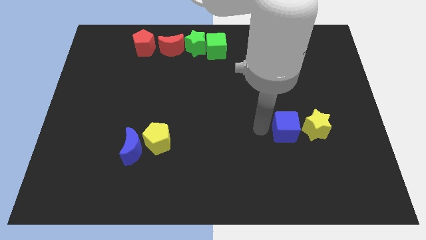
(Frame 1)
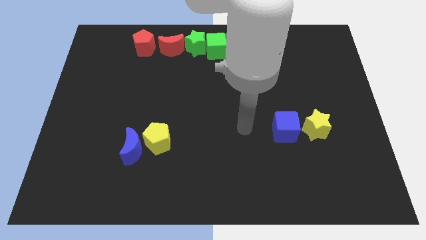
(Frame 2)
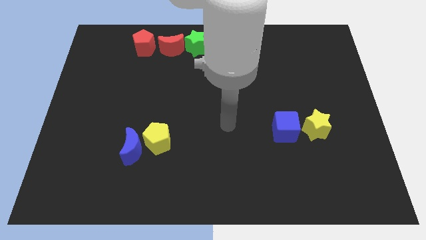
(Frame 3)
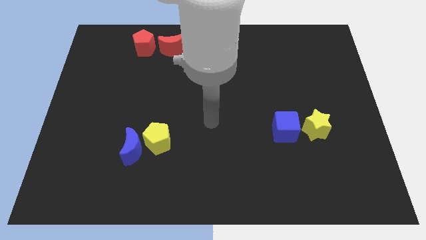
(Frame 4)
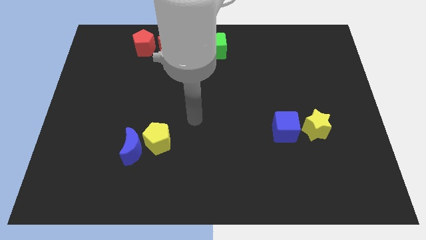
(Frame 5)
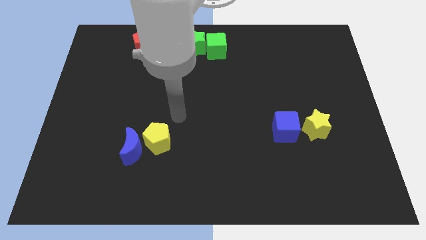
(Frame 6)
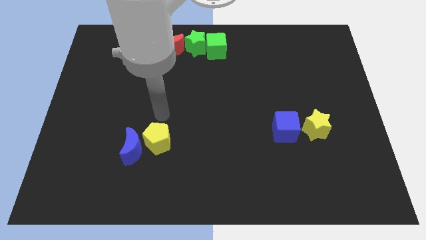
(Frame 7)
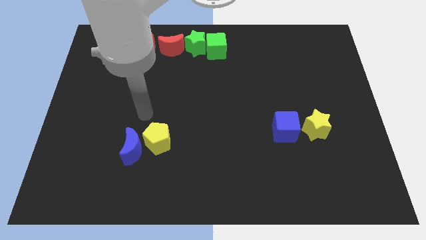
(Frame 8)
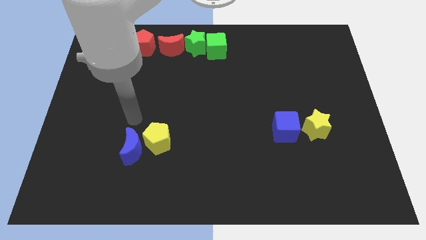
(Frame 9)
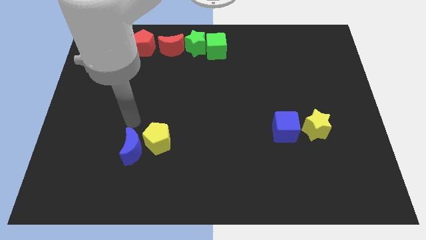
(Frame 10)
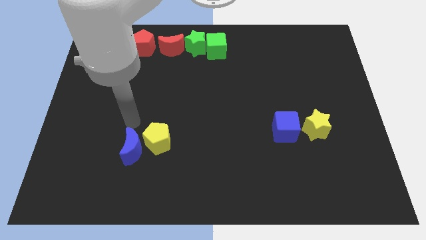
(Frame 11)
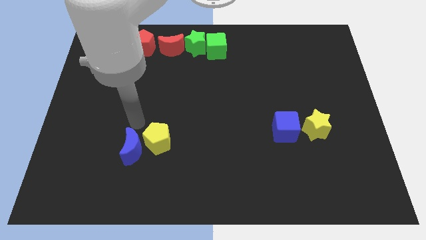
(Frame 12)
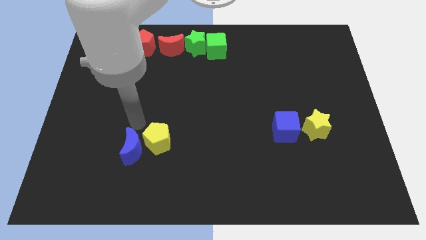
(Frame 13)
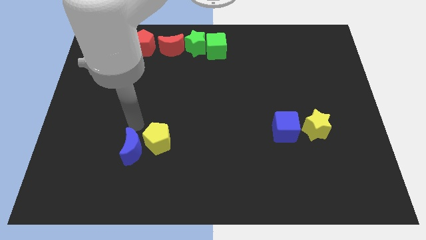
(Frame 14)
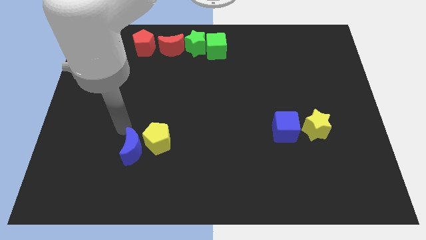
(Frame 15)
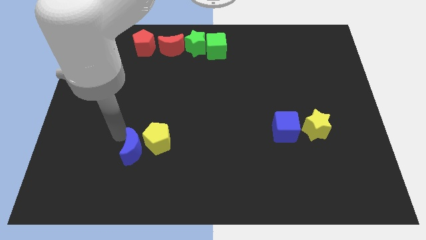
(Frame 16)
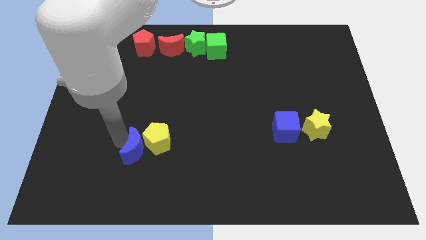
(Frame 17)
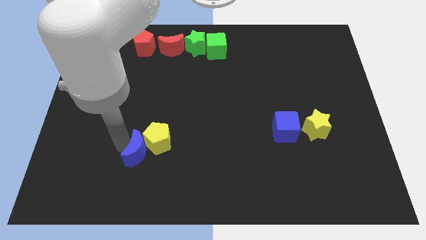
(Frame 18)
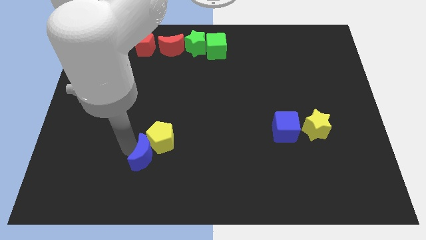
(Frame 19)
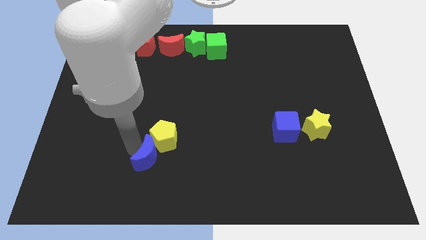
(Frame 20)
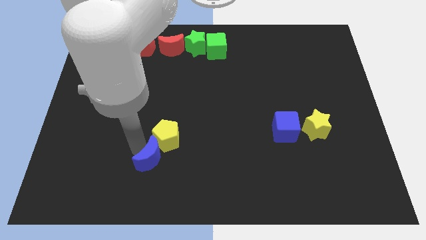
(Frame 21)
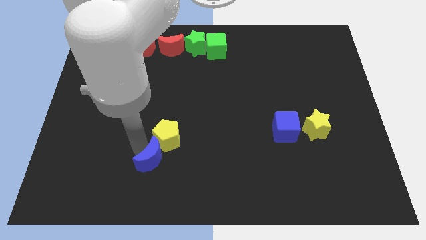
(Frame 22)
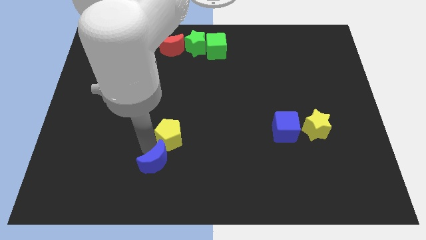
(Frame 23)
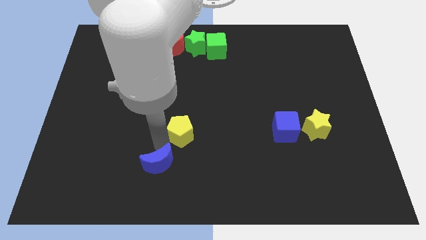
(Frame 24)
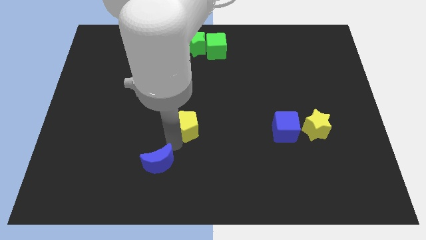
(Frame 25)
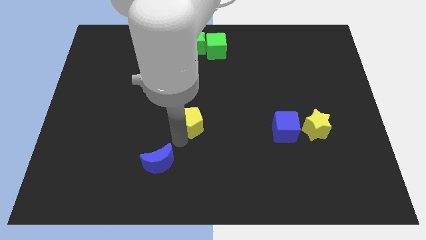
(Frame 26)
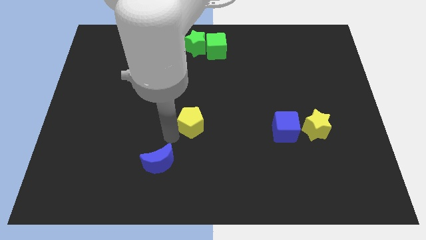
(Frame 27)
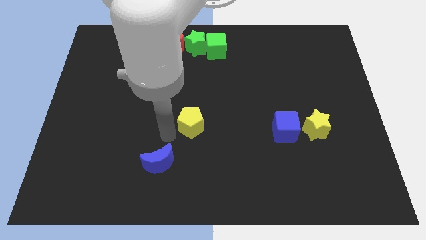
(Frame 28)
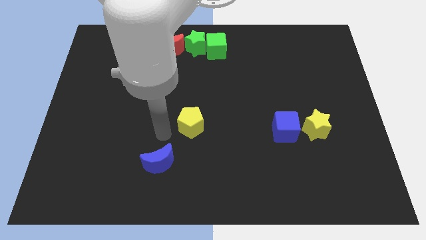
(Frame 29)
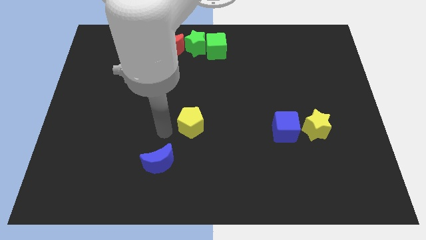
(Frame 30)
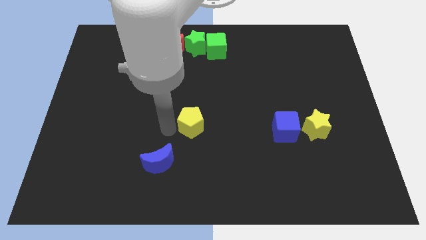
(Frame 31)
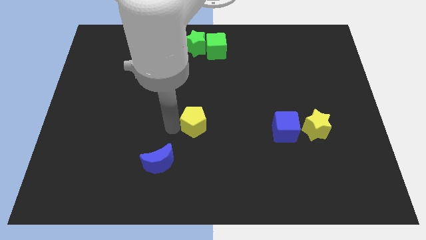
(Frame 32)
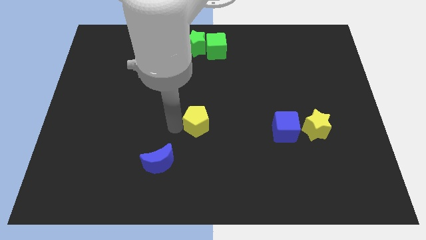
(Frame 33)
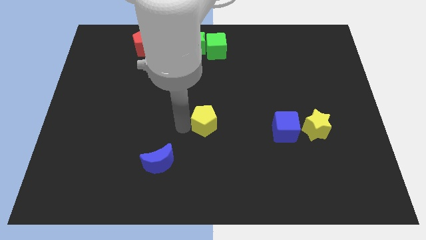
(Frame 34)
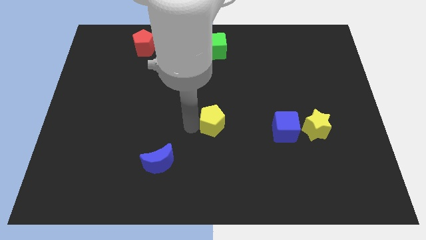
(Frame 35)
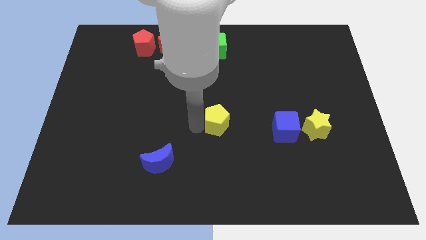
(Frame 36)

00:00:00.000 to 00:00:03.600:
place the yellow pentagon at center of the board

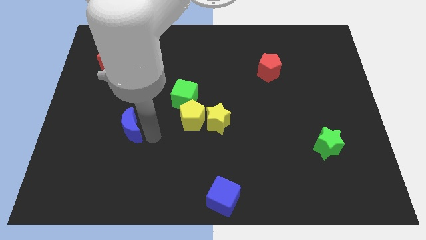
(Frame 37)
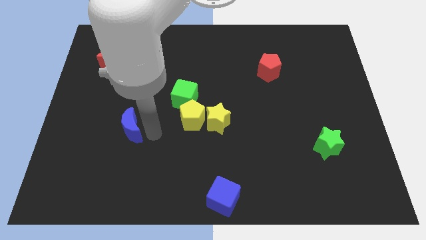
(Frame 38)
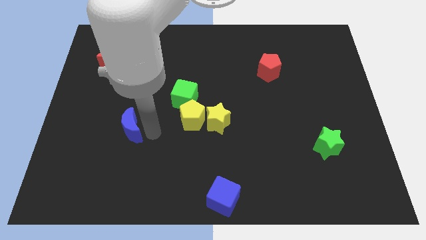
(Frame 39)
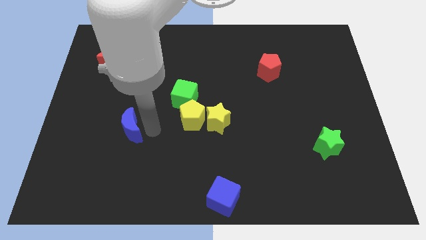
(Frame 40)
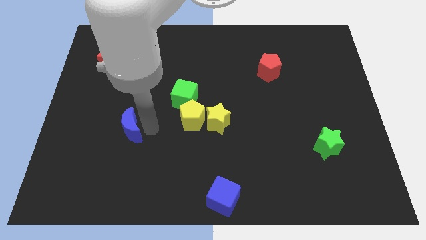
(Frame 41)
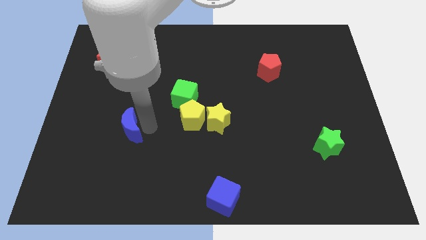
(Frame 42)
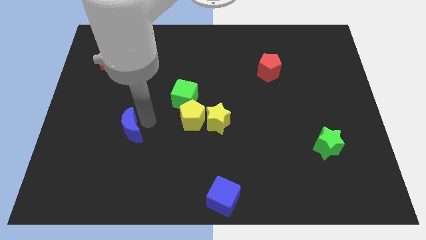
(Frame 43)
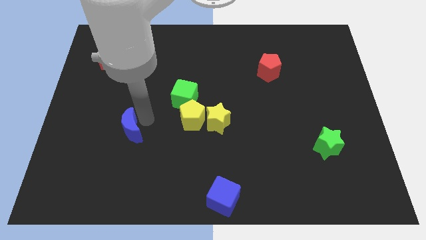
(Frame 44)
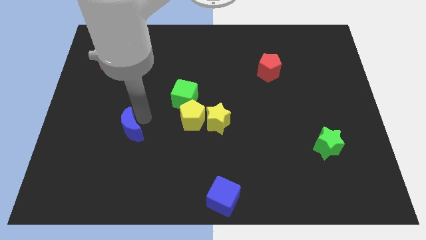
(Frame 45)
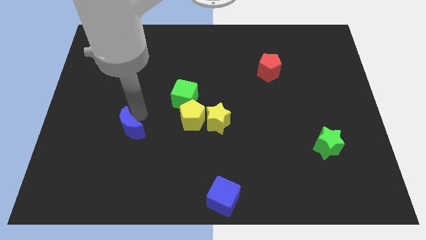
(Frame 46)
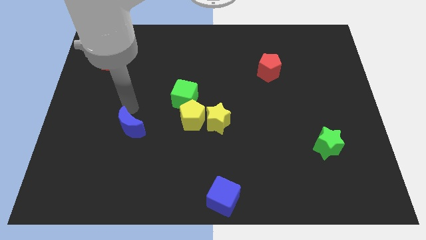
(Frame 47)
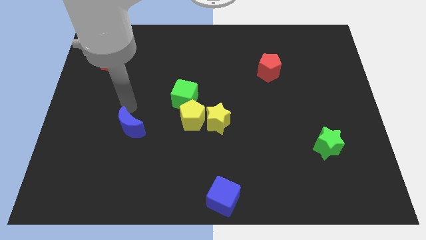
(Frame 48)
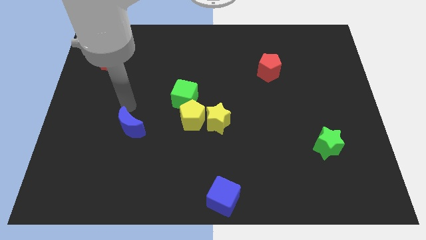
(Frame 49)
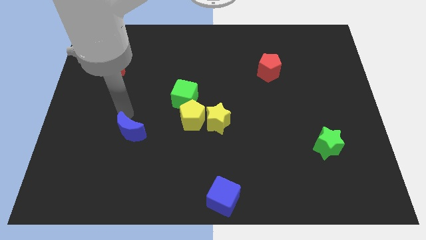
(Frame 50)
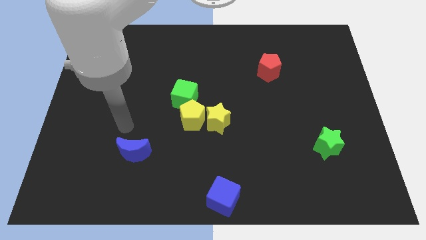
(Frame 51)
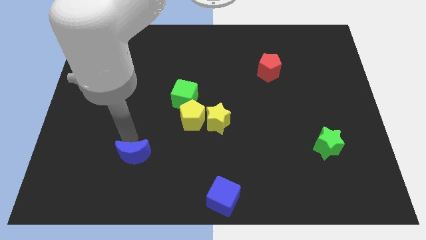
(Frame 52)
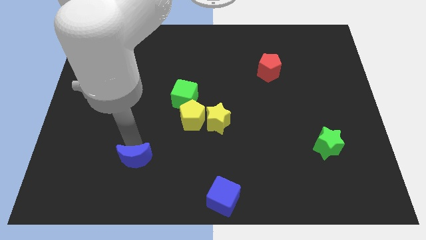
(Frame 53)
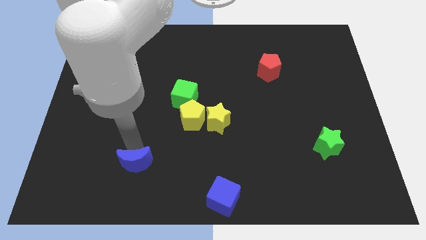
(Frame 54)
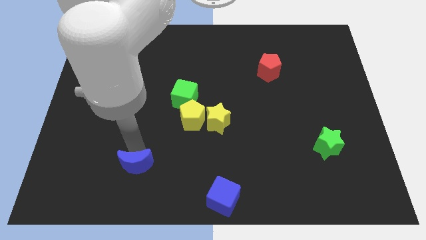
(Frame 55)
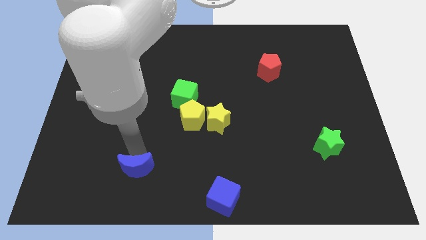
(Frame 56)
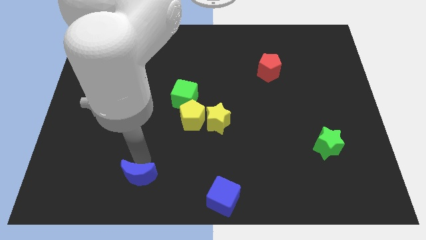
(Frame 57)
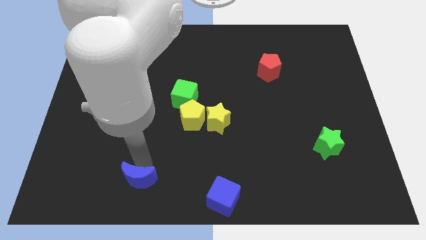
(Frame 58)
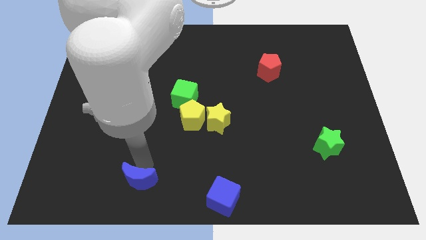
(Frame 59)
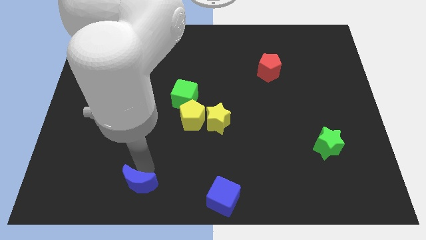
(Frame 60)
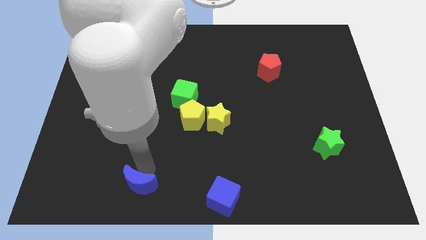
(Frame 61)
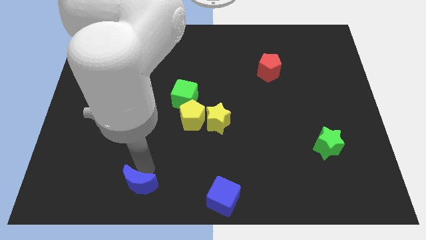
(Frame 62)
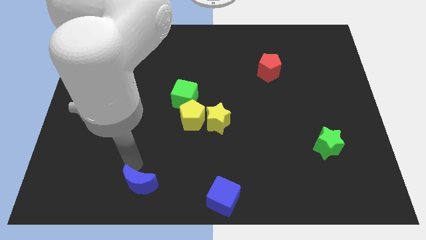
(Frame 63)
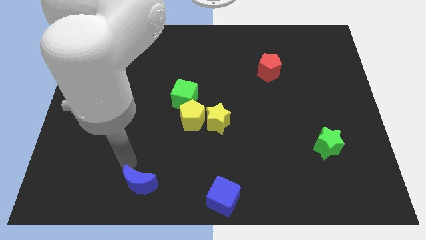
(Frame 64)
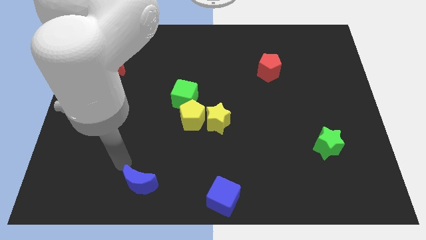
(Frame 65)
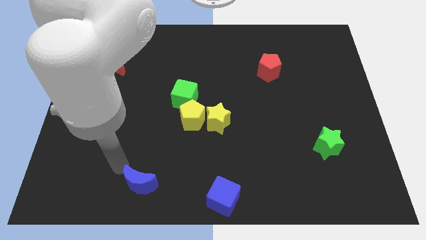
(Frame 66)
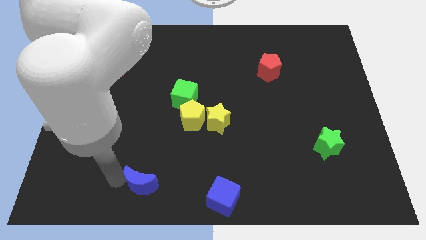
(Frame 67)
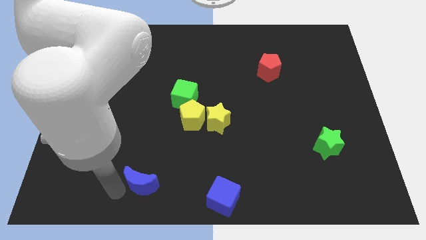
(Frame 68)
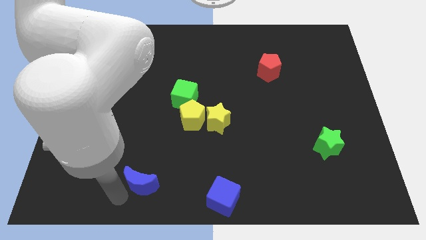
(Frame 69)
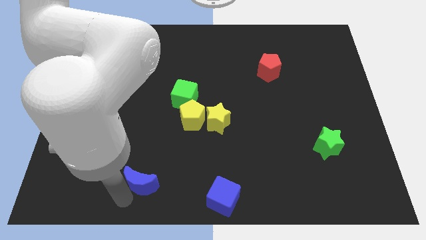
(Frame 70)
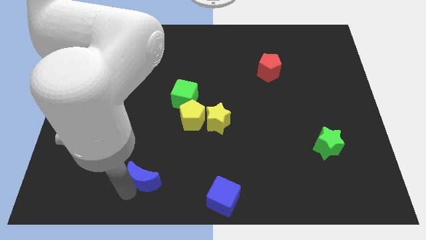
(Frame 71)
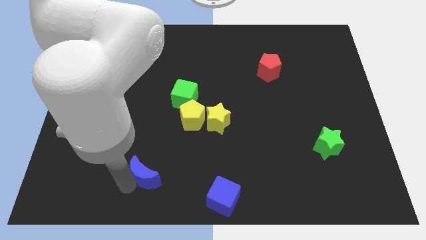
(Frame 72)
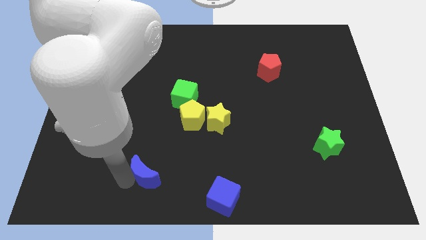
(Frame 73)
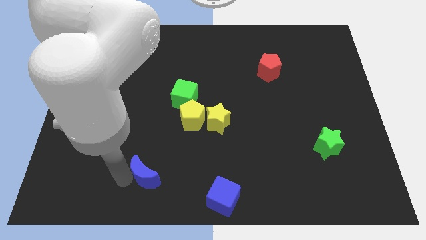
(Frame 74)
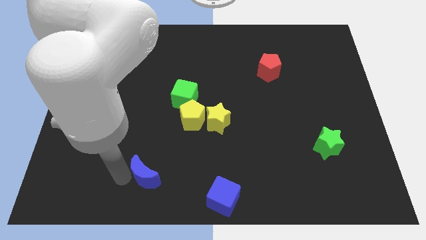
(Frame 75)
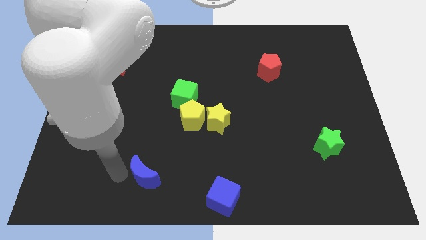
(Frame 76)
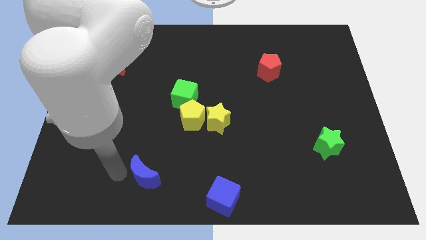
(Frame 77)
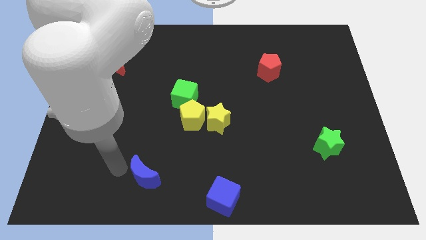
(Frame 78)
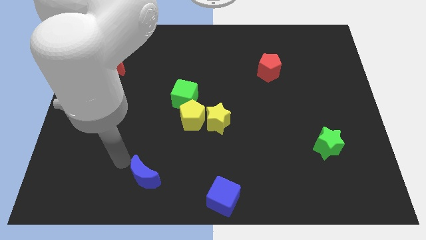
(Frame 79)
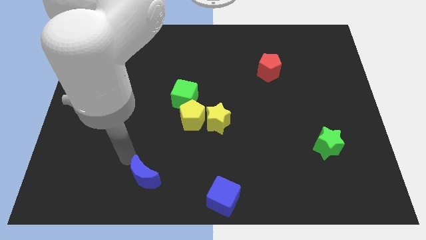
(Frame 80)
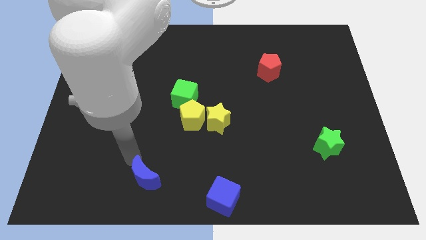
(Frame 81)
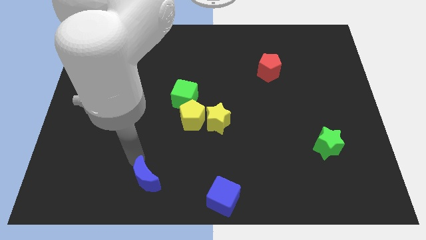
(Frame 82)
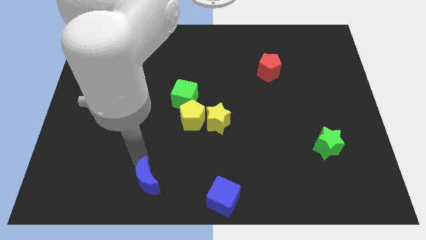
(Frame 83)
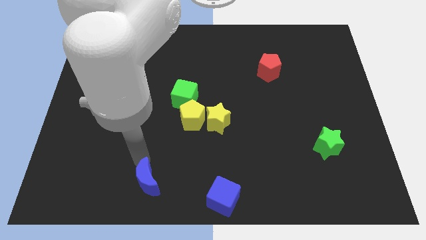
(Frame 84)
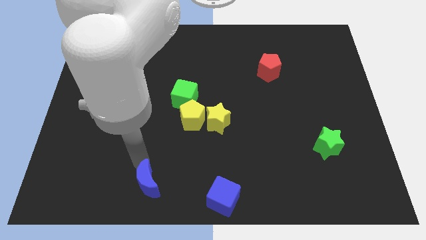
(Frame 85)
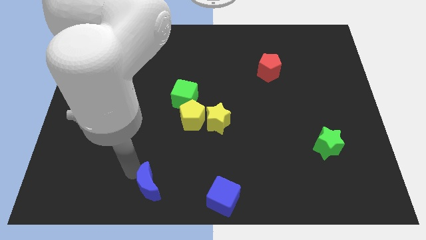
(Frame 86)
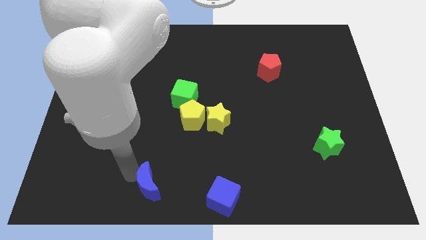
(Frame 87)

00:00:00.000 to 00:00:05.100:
push the blue crescent towards the bottom
